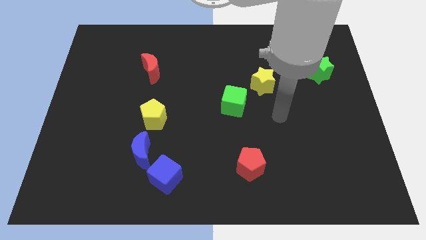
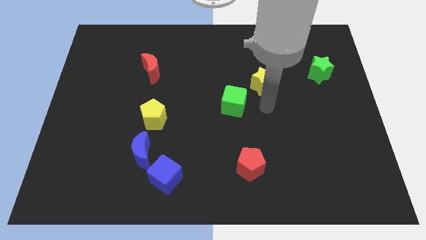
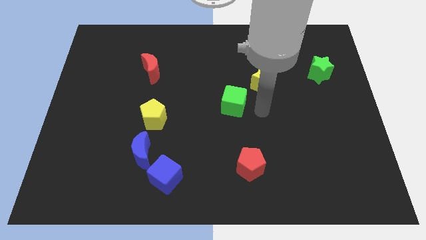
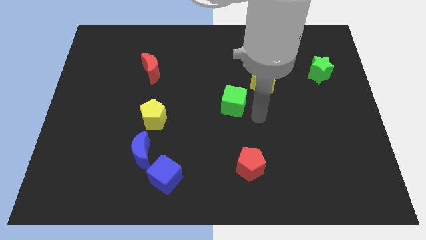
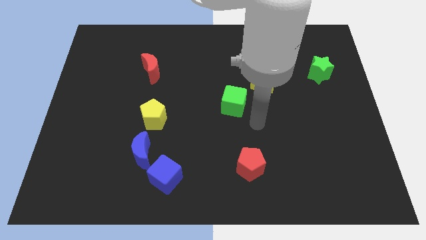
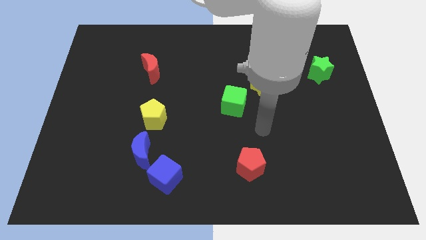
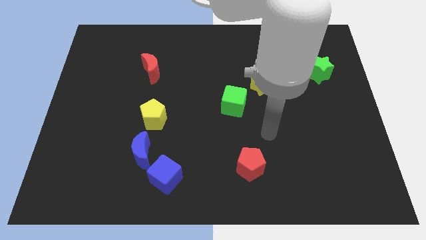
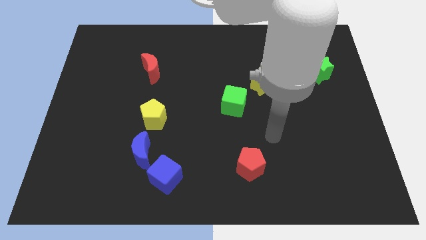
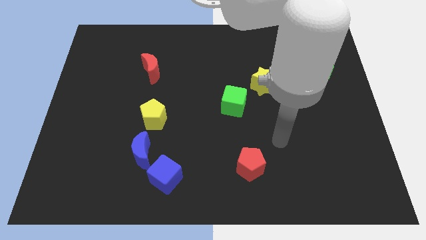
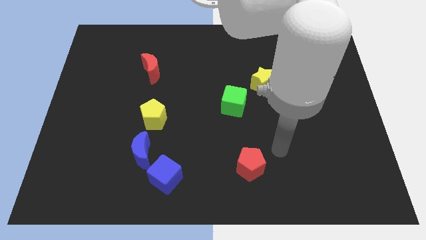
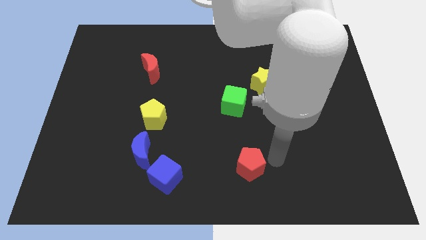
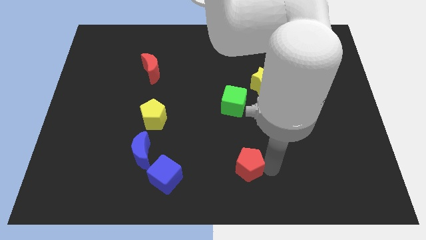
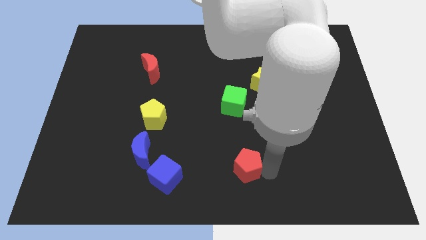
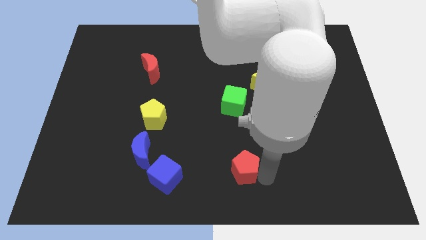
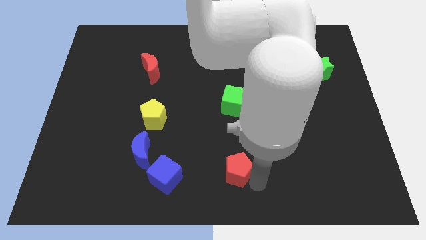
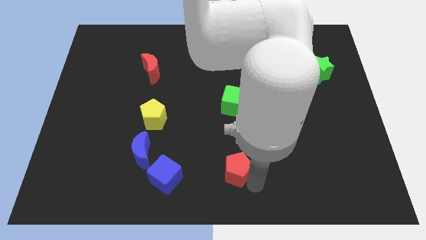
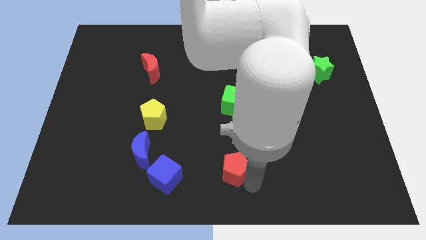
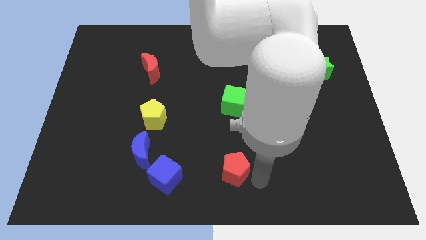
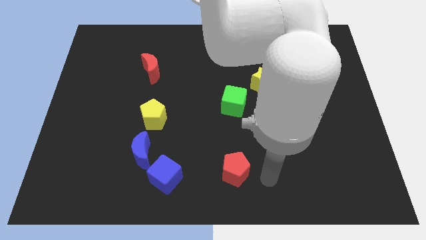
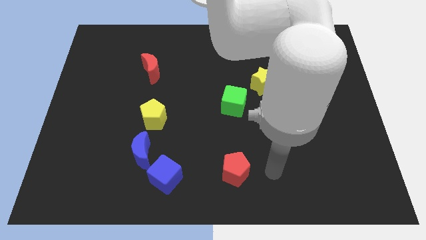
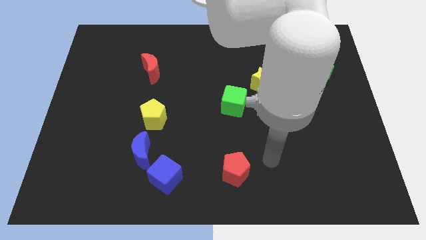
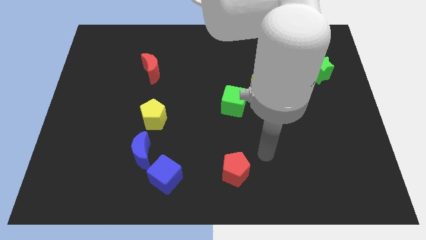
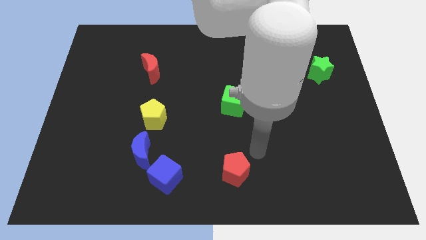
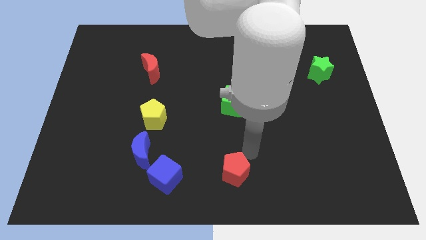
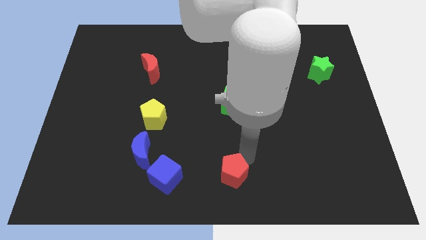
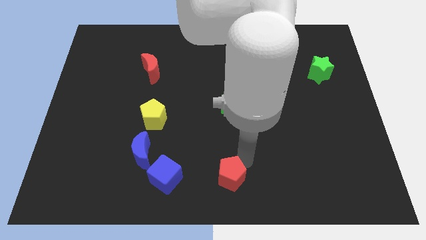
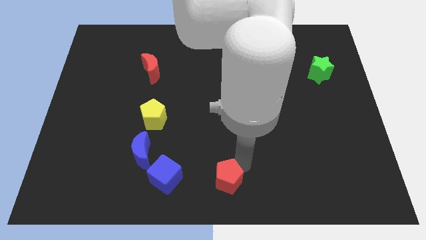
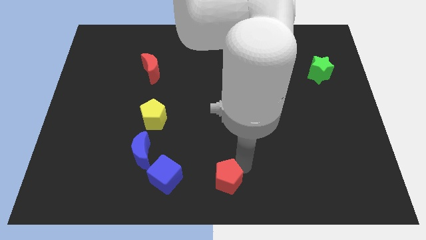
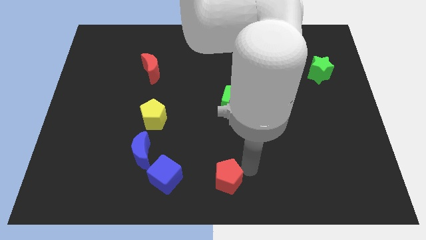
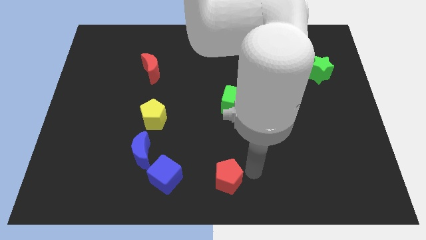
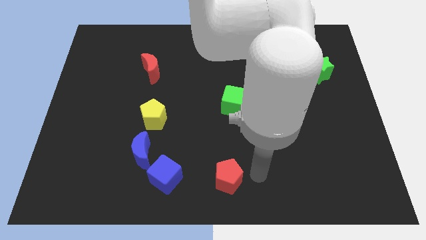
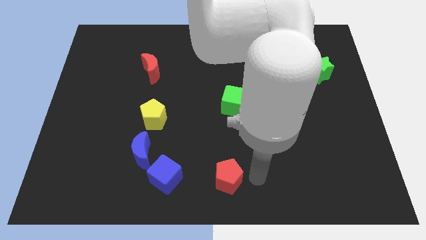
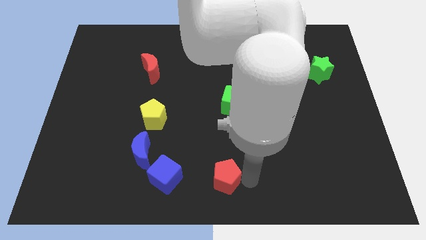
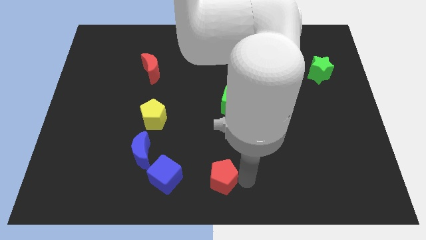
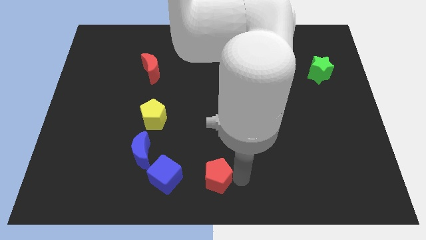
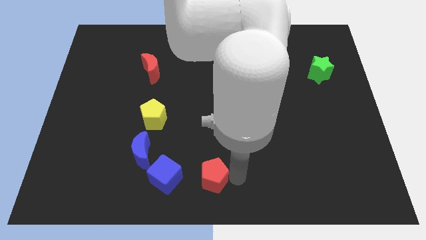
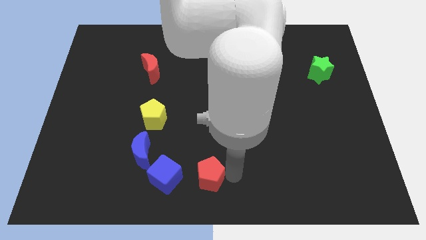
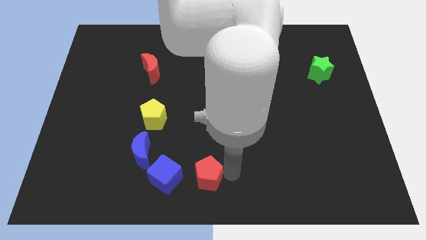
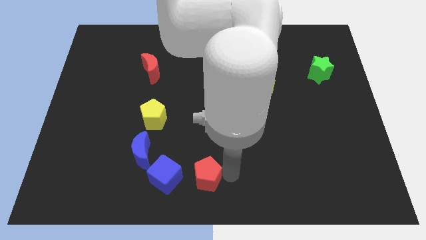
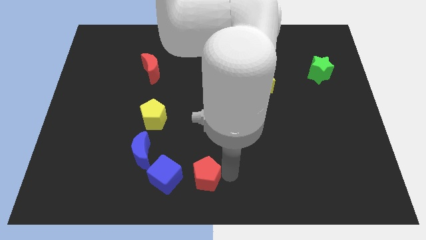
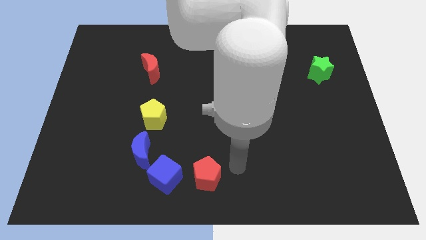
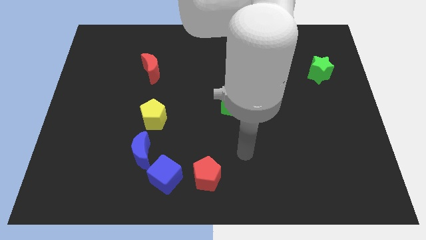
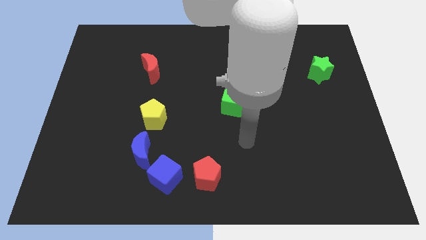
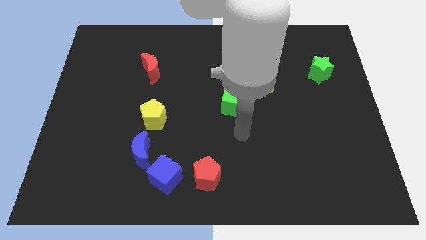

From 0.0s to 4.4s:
place the red pentagon to the right of the blue cube

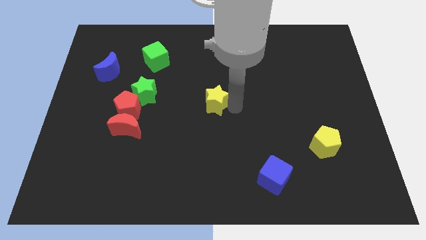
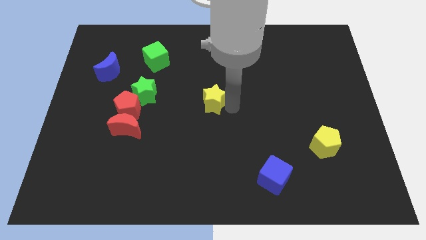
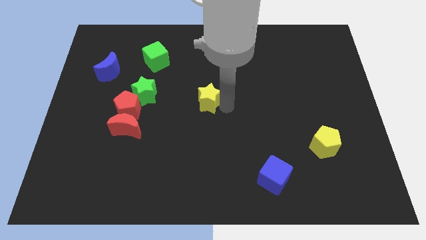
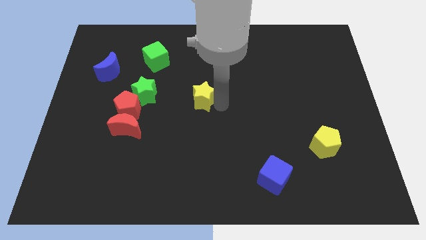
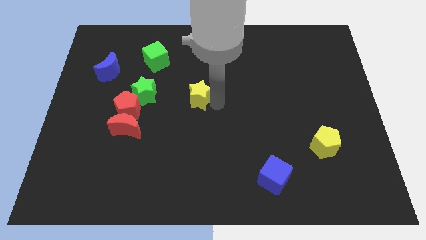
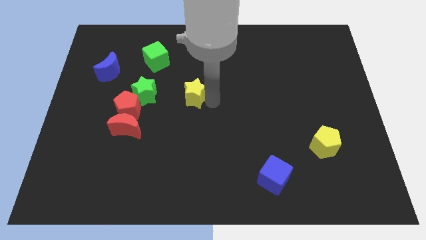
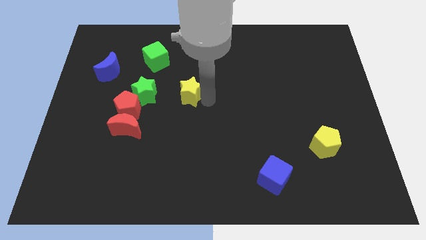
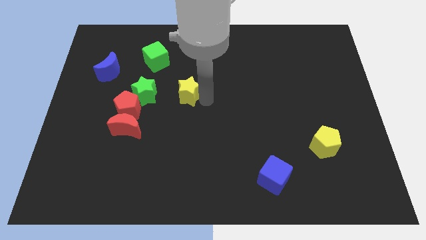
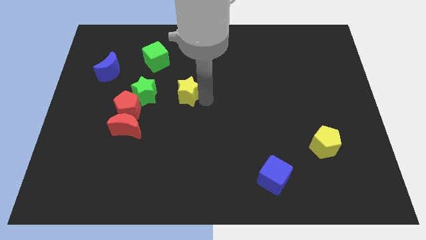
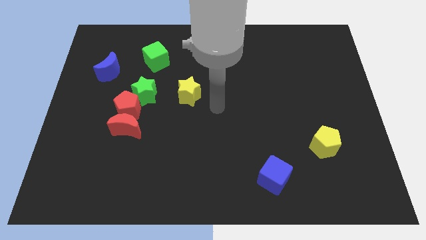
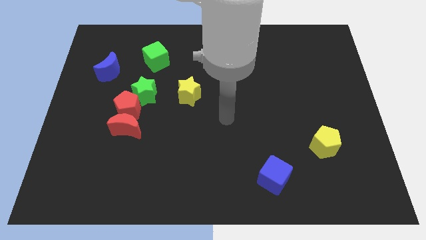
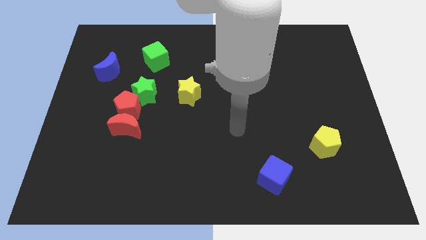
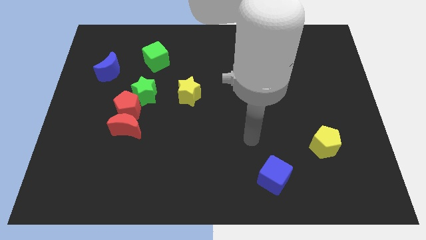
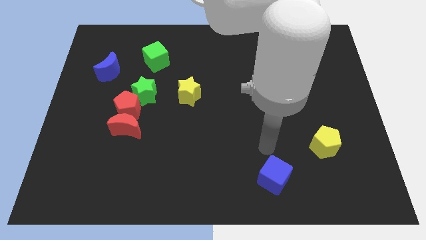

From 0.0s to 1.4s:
place the yellow star to the right of the green star

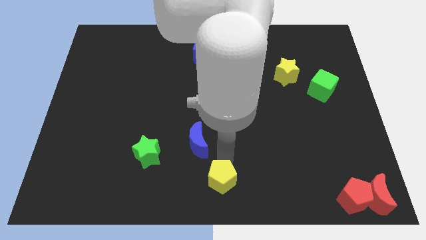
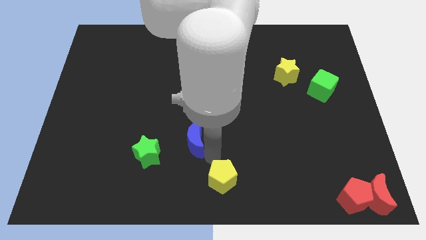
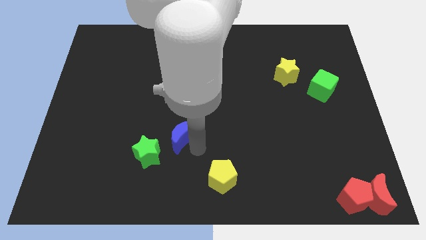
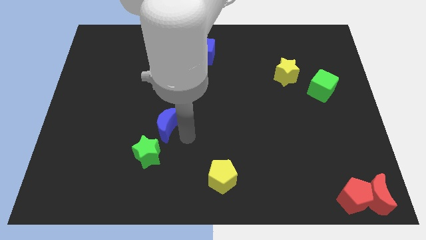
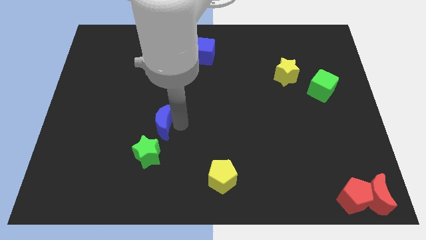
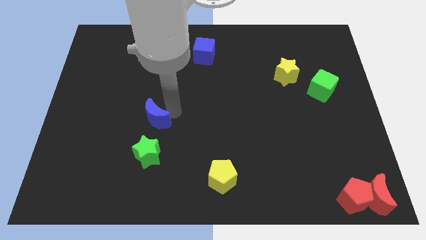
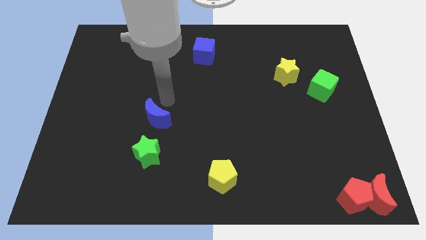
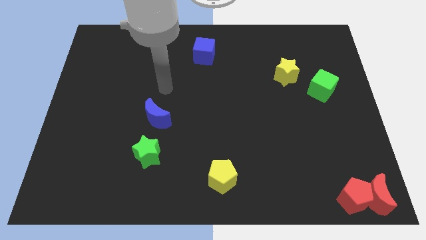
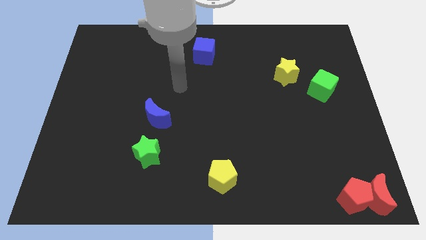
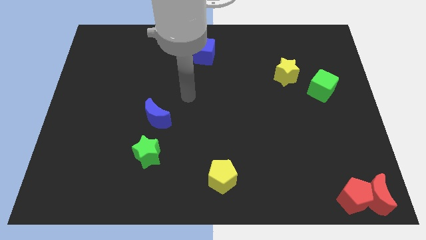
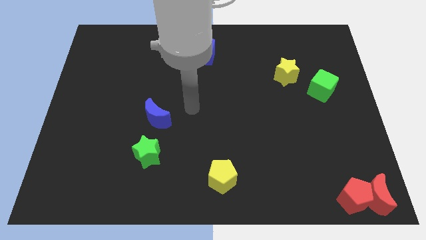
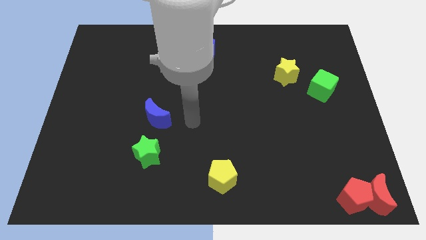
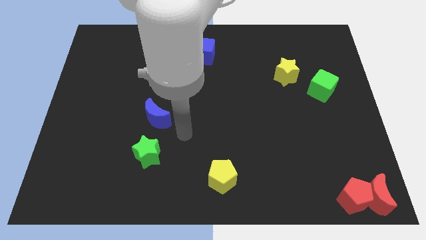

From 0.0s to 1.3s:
line the blue crescent up vertically above the green star

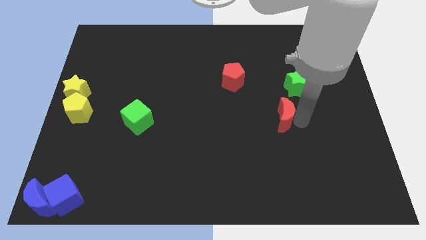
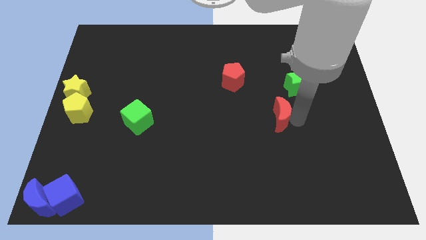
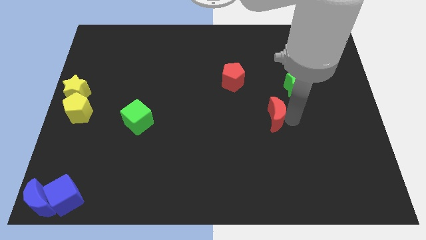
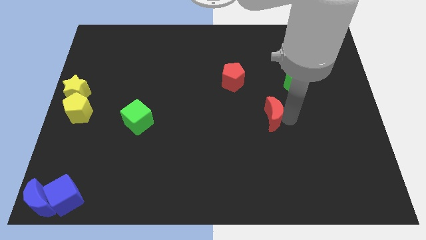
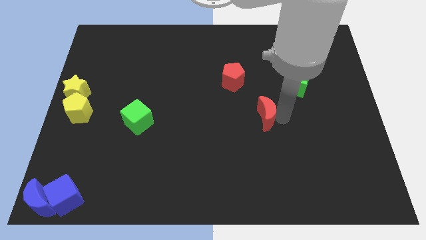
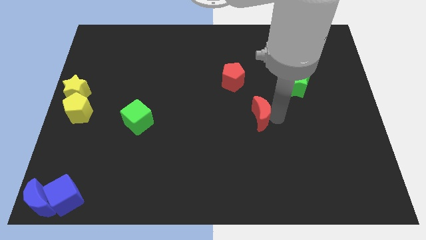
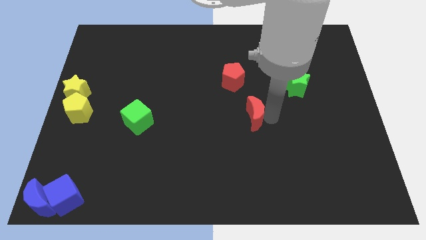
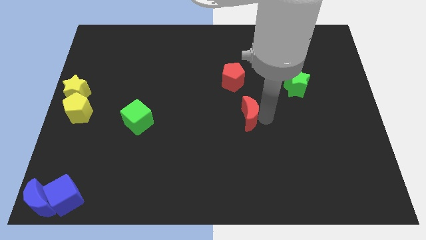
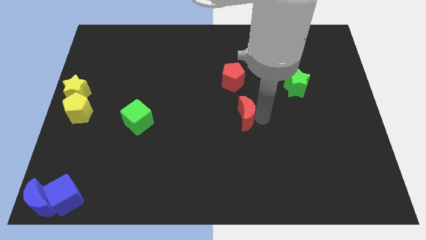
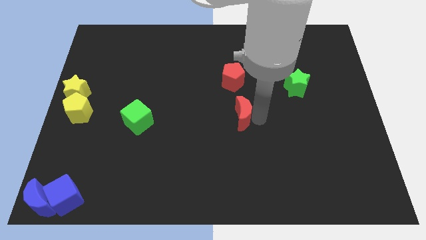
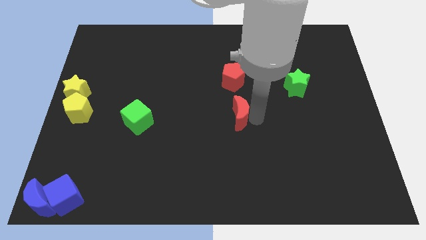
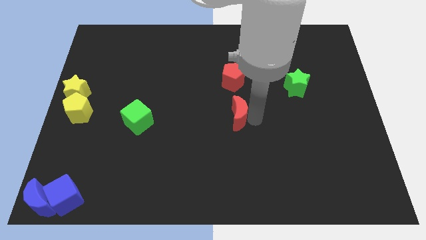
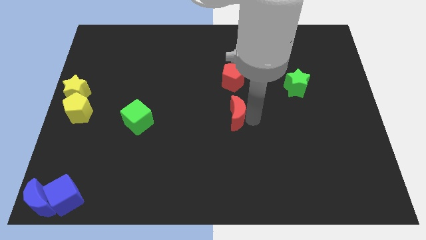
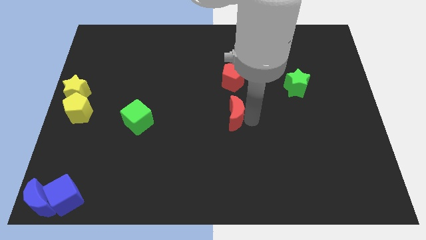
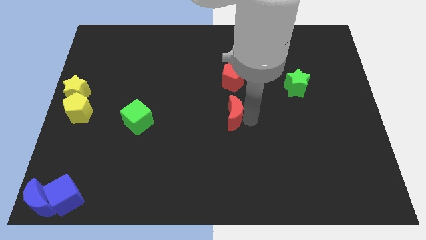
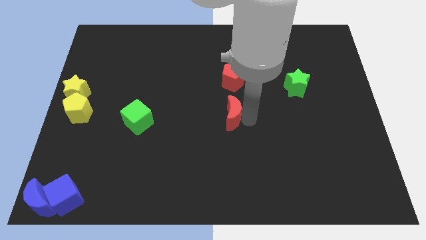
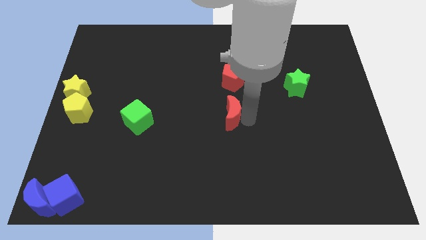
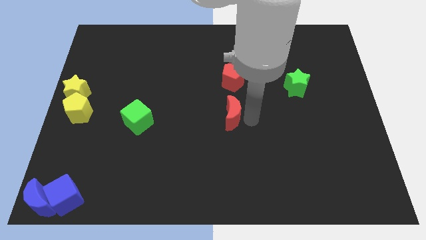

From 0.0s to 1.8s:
move red crescent towards the centre of the board
